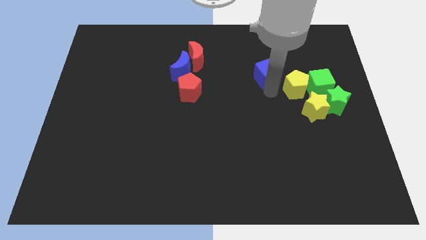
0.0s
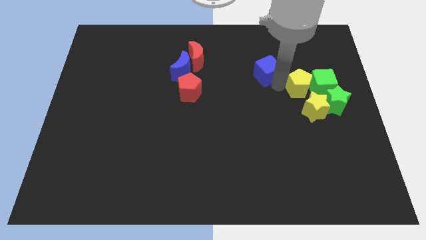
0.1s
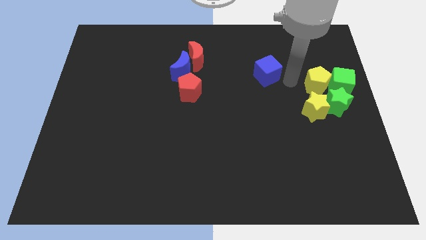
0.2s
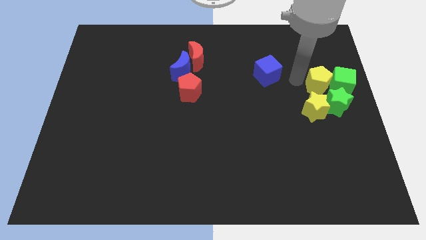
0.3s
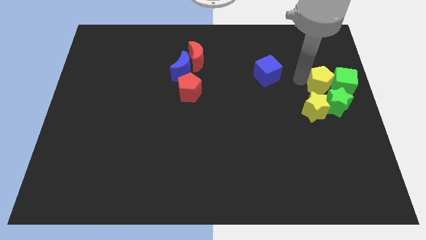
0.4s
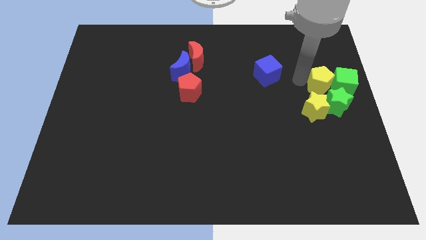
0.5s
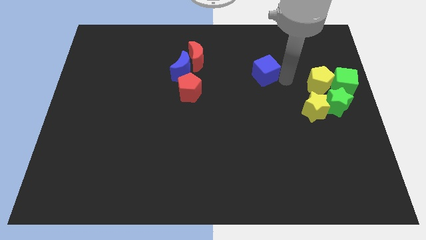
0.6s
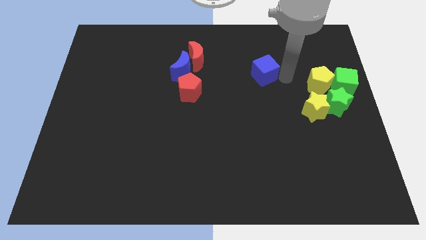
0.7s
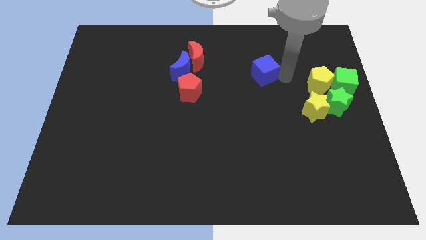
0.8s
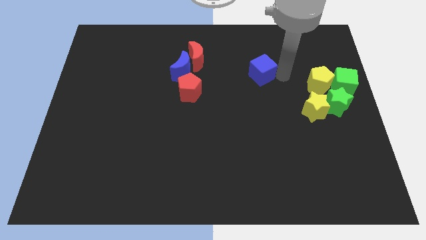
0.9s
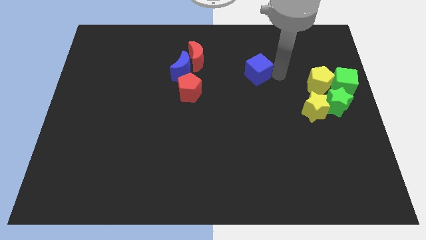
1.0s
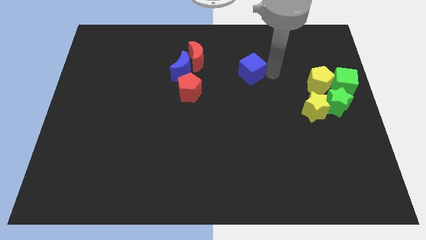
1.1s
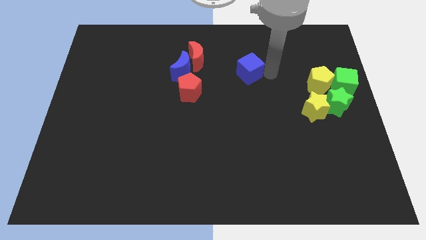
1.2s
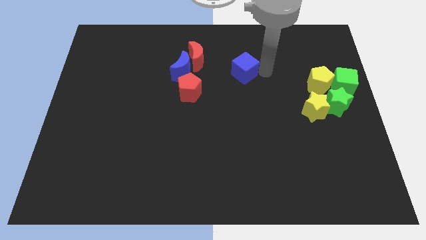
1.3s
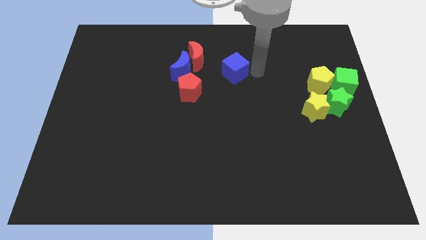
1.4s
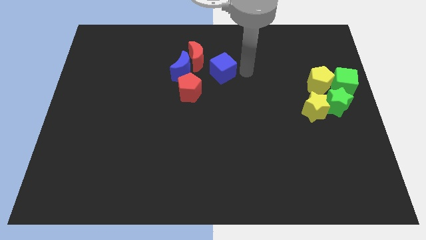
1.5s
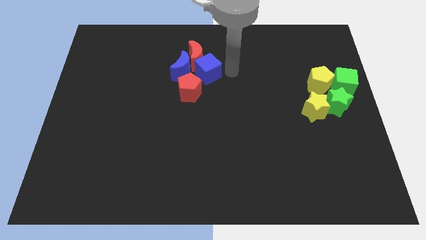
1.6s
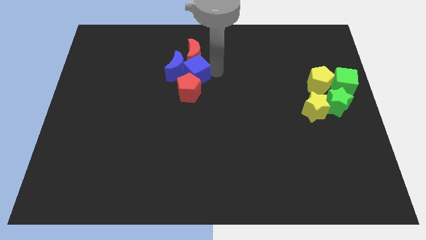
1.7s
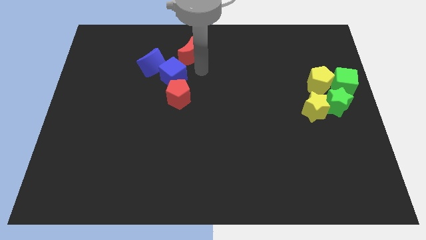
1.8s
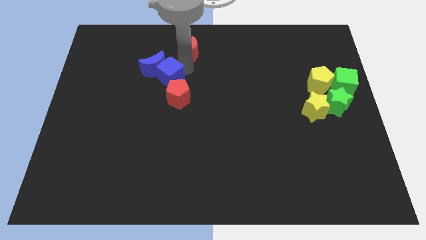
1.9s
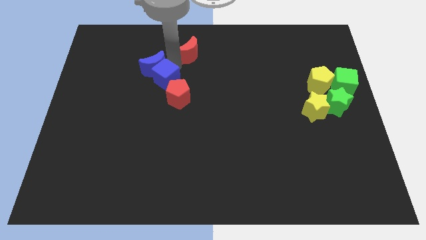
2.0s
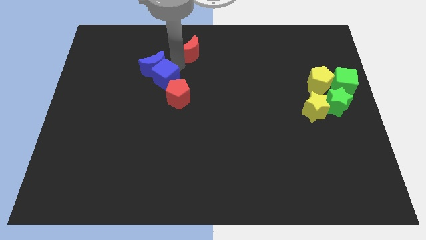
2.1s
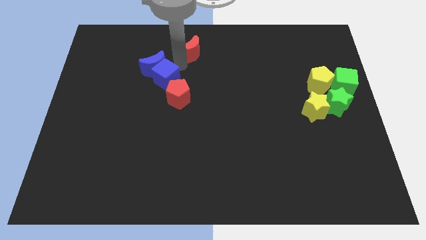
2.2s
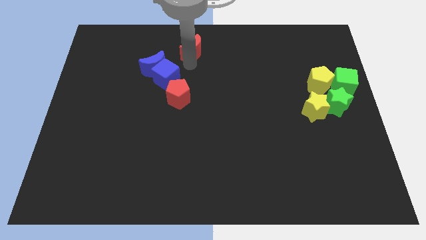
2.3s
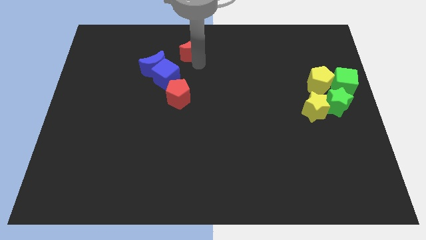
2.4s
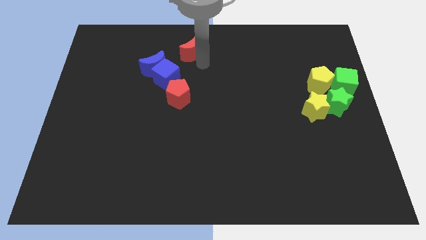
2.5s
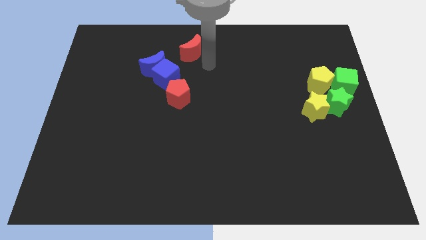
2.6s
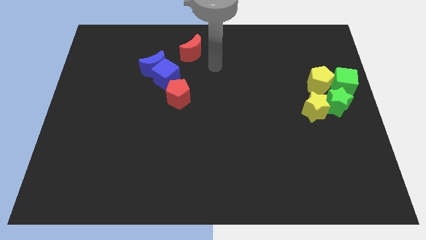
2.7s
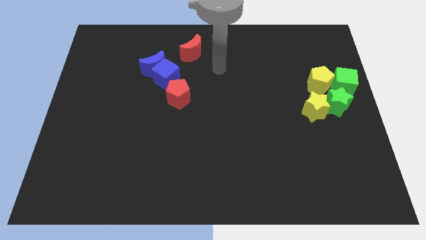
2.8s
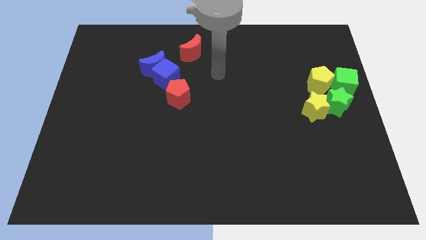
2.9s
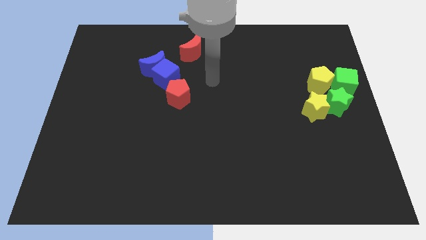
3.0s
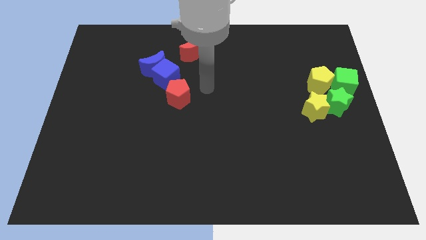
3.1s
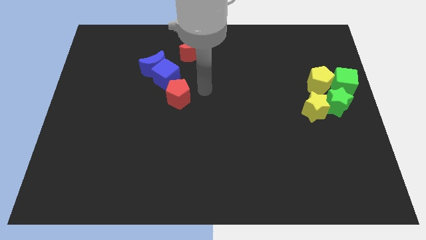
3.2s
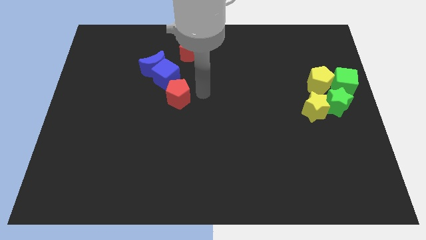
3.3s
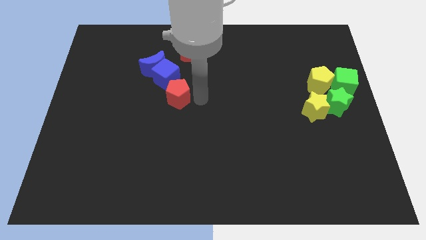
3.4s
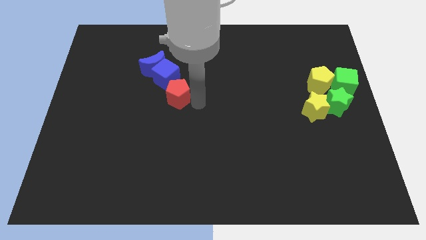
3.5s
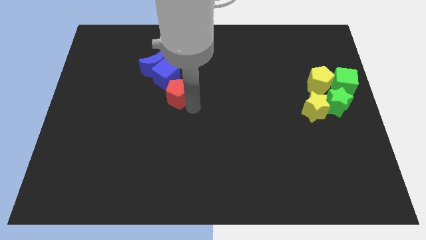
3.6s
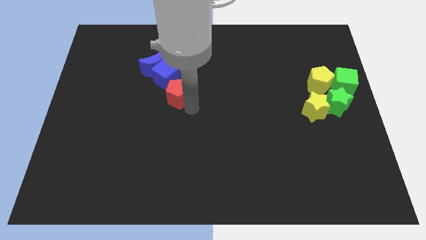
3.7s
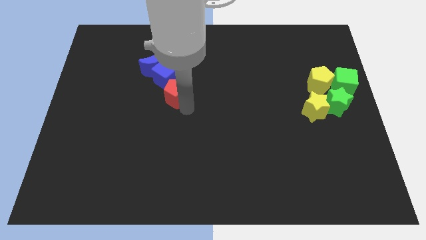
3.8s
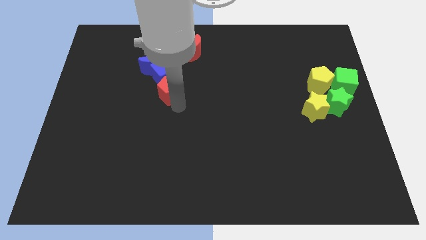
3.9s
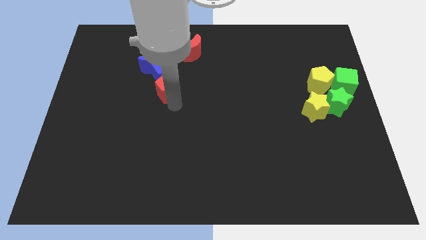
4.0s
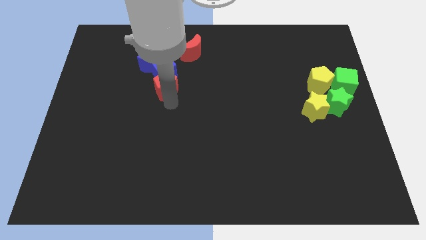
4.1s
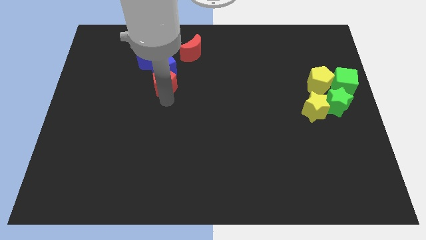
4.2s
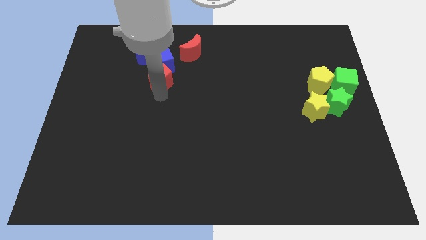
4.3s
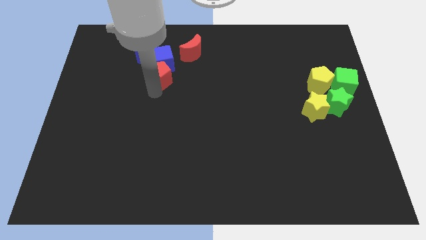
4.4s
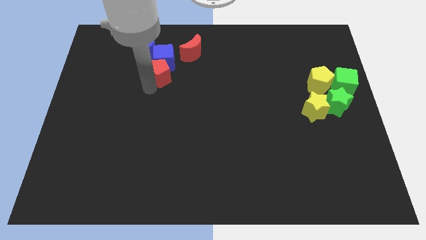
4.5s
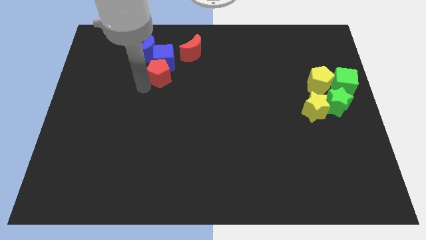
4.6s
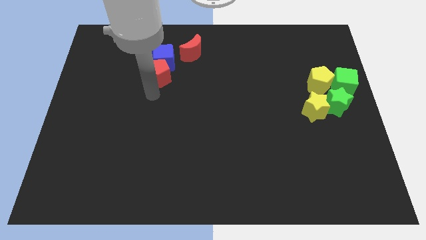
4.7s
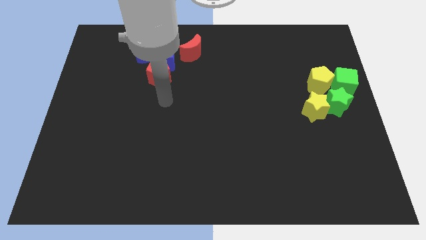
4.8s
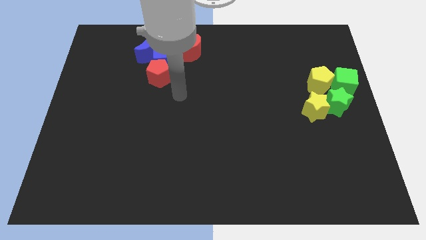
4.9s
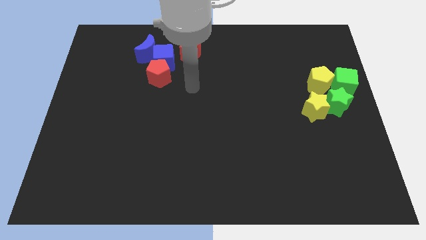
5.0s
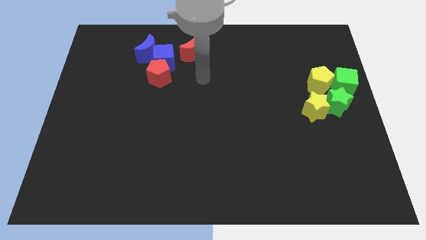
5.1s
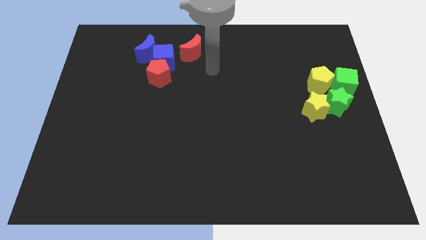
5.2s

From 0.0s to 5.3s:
push the blue cube into the blue moon

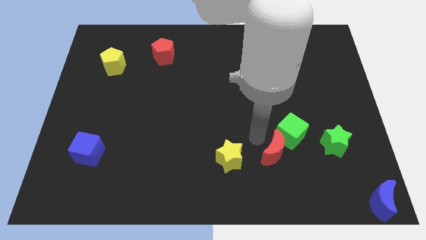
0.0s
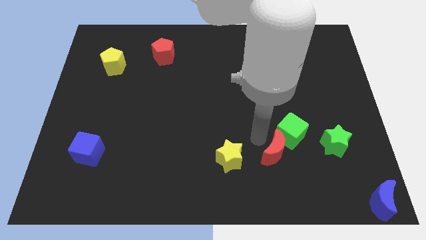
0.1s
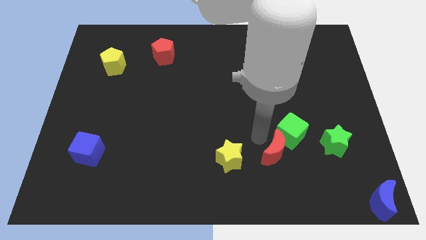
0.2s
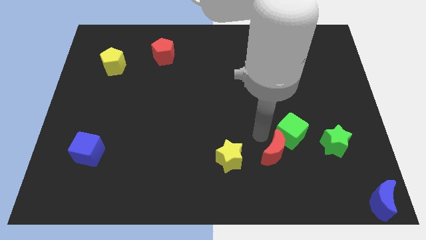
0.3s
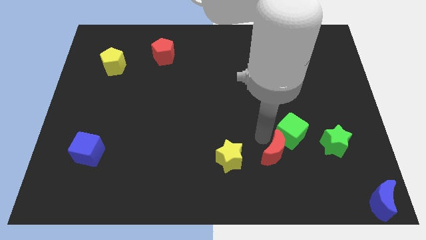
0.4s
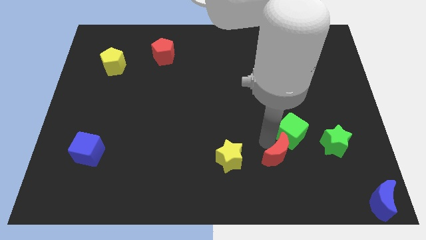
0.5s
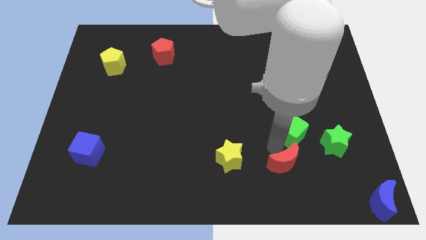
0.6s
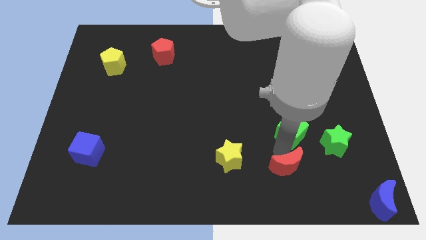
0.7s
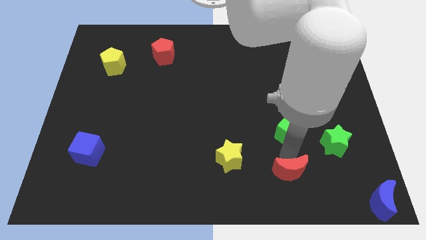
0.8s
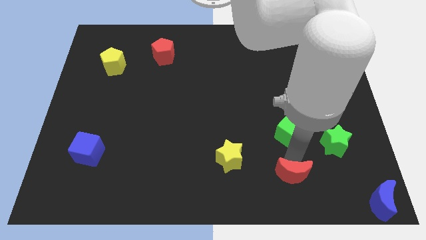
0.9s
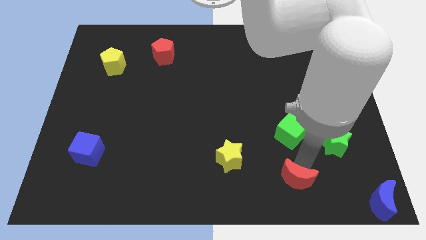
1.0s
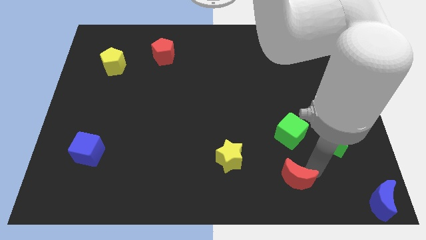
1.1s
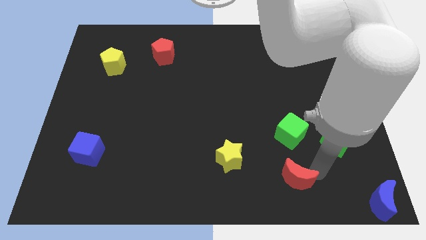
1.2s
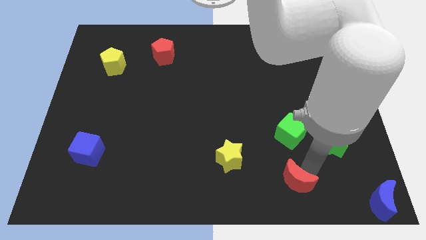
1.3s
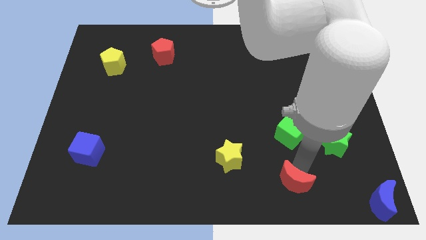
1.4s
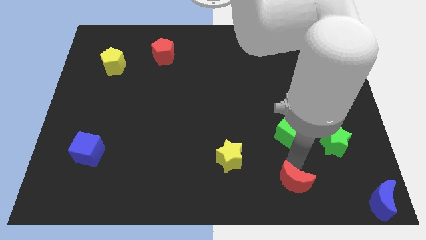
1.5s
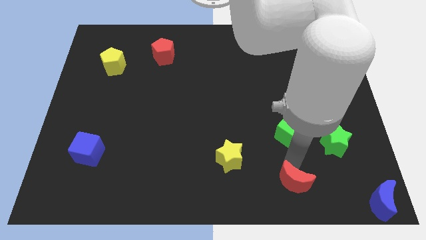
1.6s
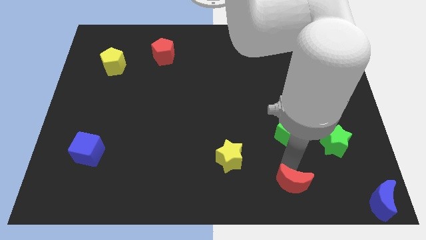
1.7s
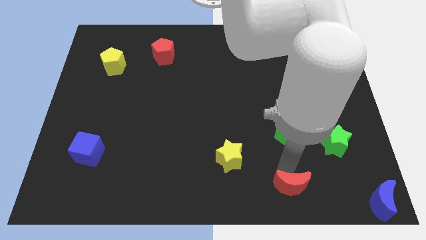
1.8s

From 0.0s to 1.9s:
push the red crescent to the bottom of the green cube

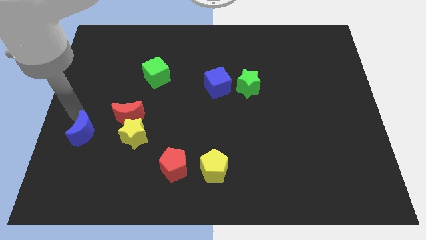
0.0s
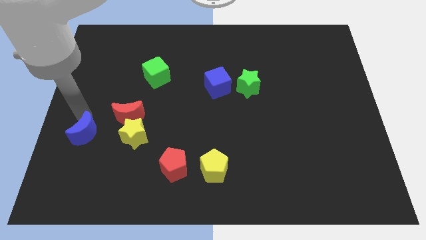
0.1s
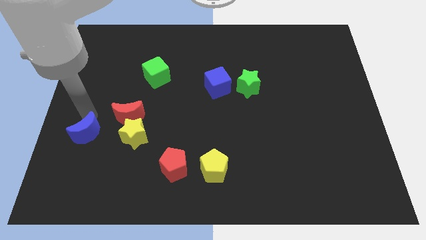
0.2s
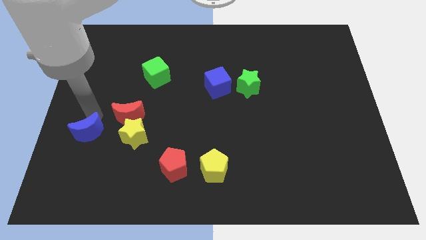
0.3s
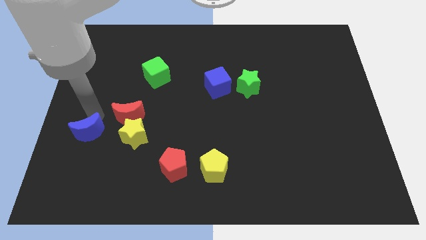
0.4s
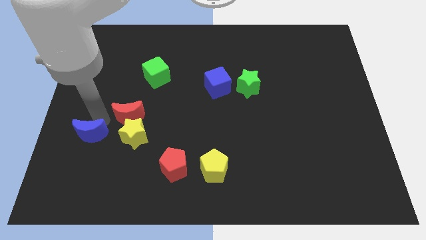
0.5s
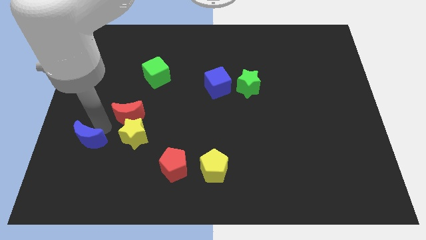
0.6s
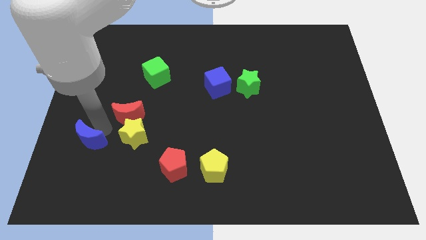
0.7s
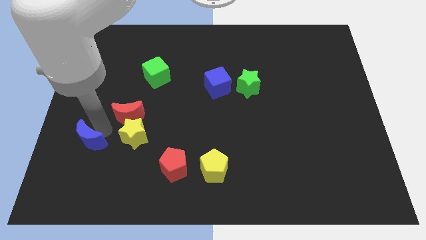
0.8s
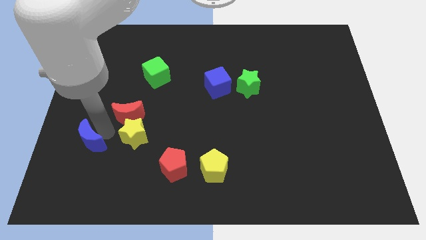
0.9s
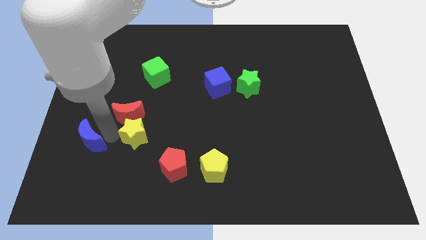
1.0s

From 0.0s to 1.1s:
slide blue moon towards the left of yellow star

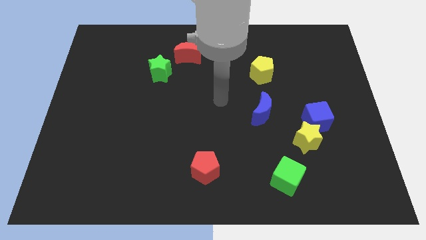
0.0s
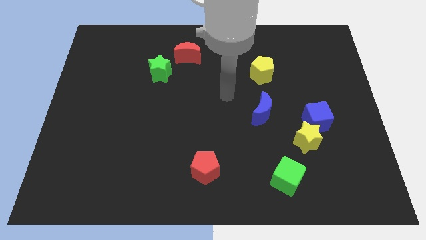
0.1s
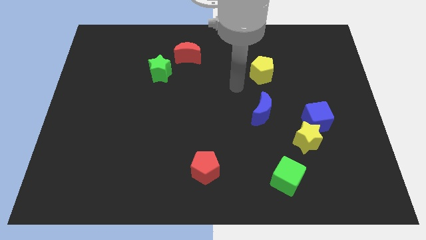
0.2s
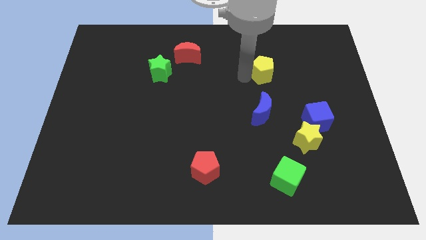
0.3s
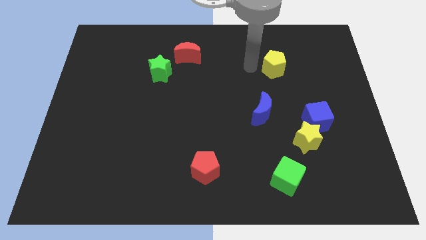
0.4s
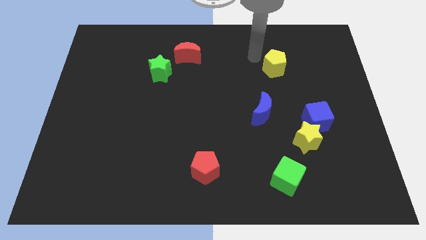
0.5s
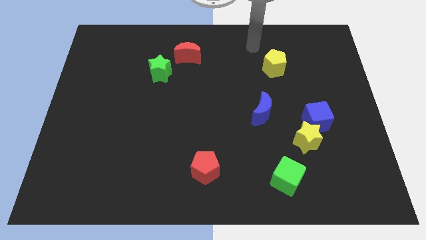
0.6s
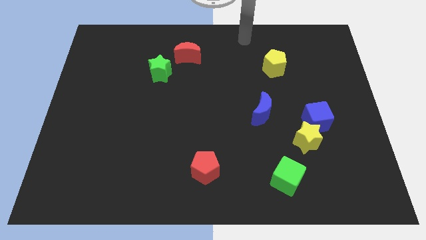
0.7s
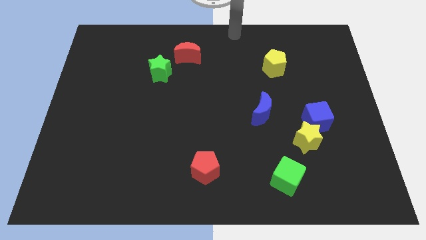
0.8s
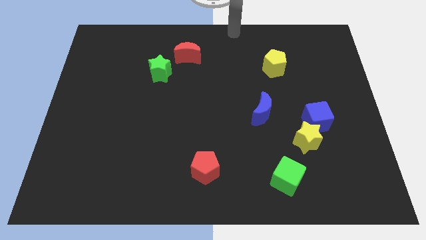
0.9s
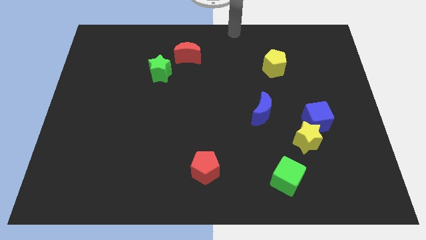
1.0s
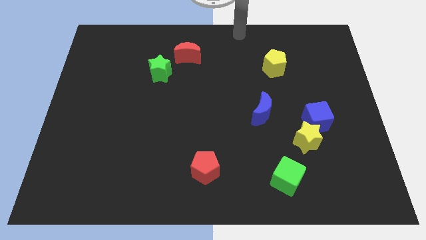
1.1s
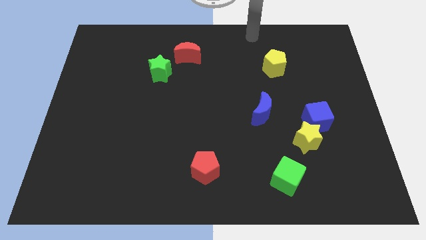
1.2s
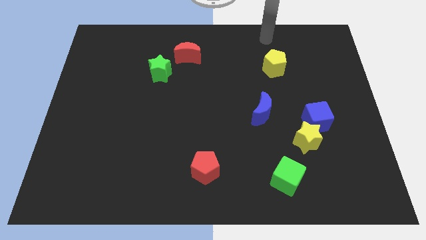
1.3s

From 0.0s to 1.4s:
push the yellow pentagon slightly diagonal to blue moon
